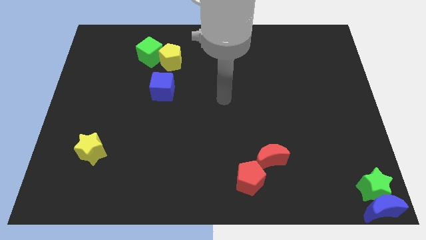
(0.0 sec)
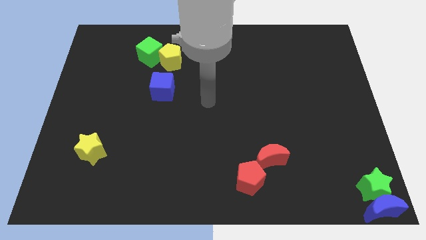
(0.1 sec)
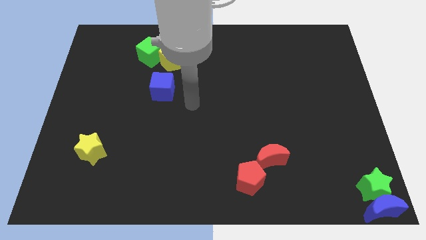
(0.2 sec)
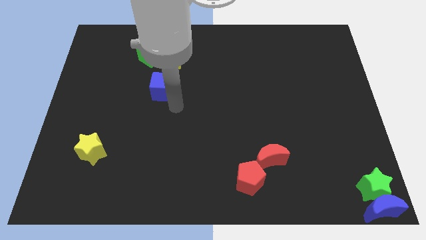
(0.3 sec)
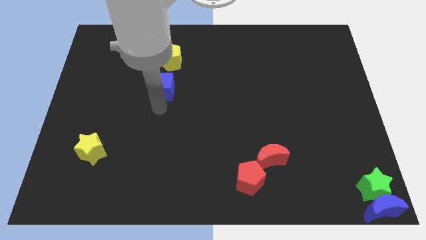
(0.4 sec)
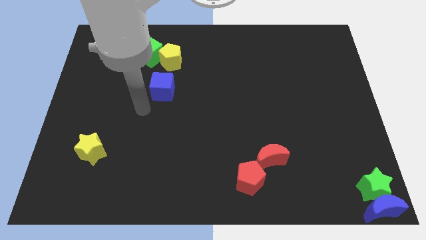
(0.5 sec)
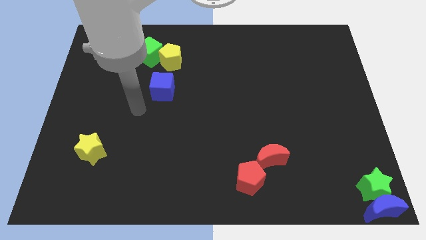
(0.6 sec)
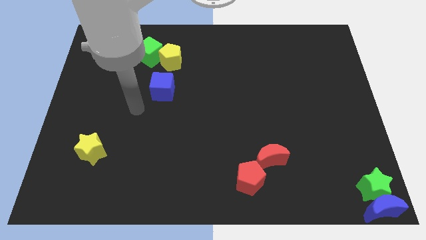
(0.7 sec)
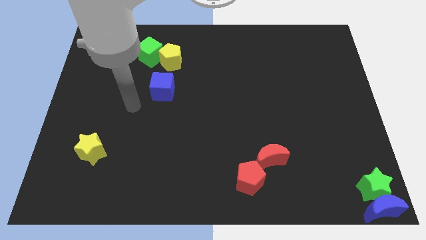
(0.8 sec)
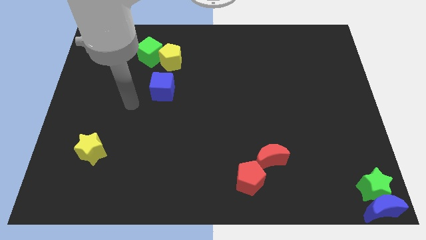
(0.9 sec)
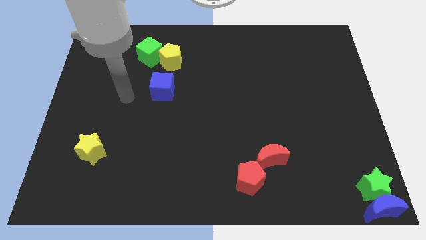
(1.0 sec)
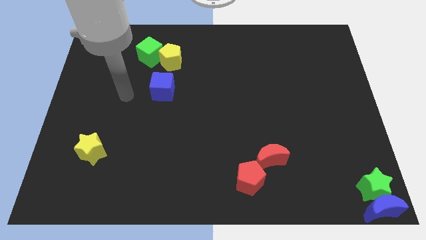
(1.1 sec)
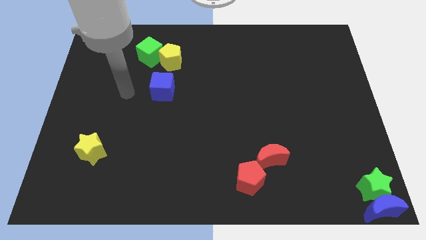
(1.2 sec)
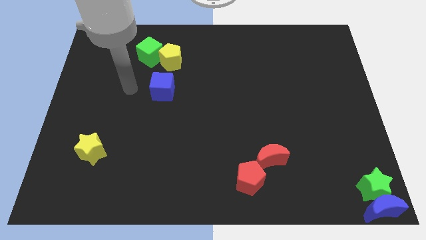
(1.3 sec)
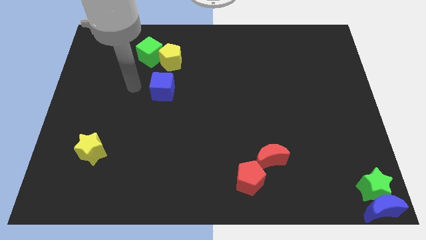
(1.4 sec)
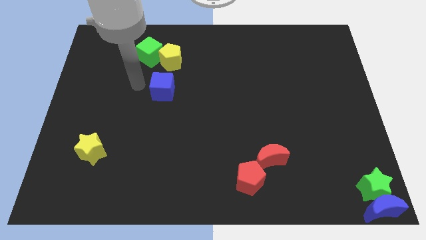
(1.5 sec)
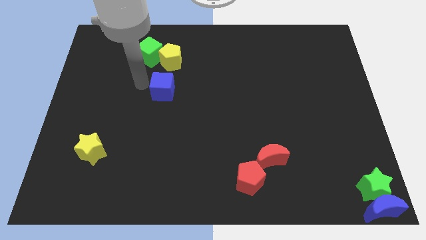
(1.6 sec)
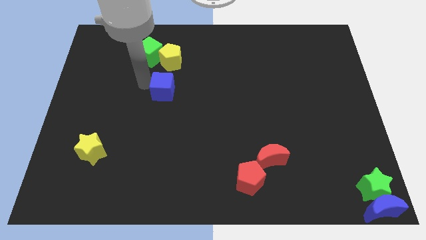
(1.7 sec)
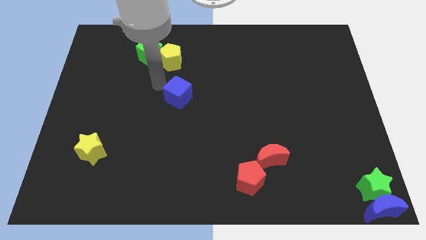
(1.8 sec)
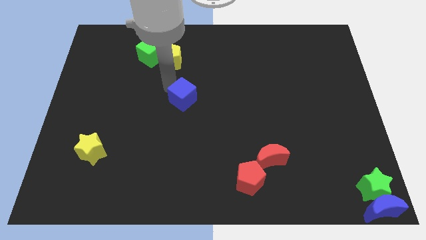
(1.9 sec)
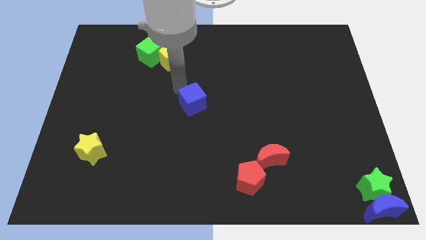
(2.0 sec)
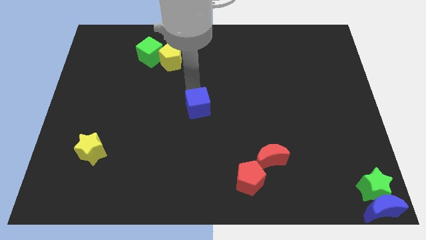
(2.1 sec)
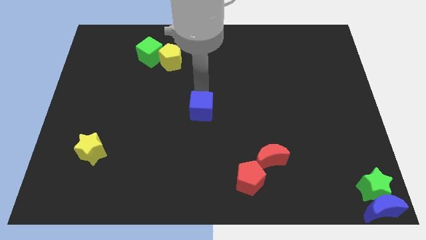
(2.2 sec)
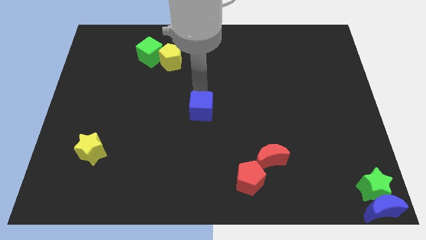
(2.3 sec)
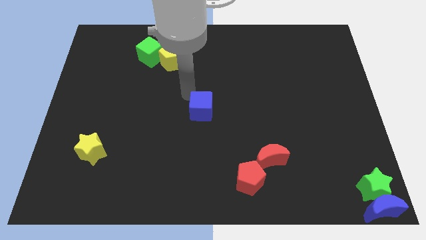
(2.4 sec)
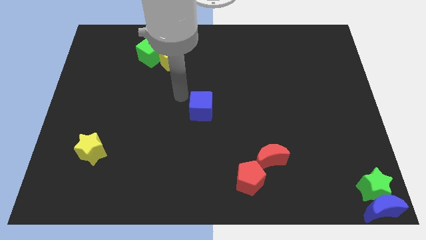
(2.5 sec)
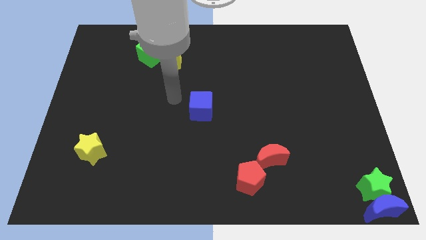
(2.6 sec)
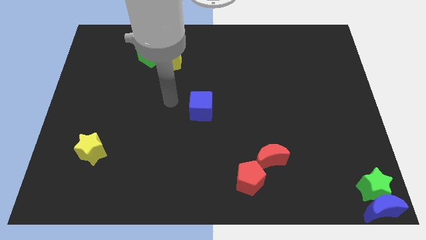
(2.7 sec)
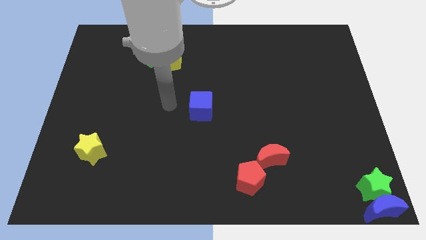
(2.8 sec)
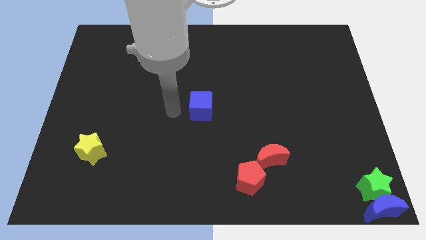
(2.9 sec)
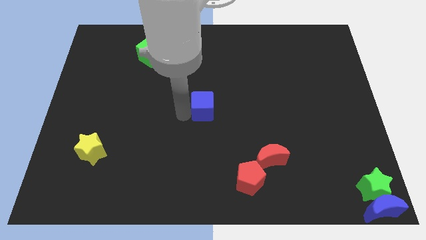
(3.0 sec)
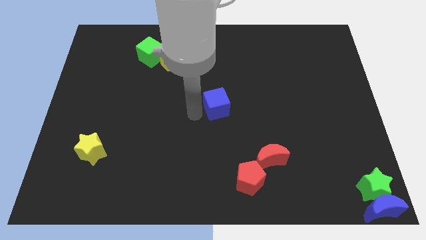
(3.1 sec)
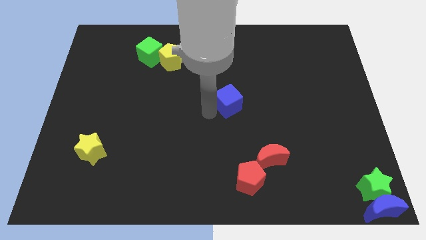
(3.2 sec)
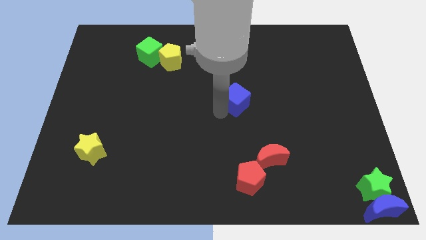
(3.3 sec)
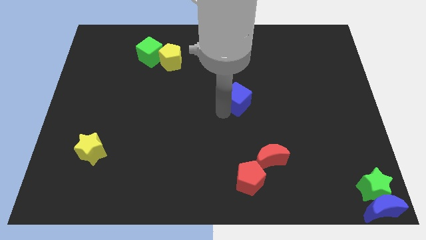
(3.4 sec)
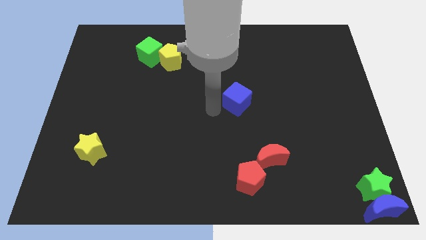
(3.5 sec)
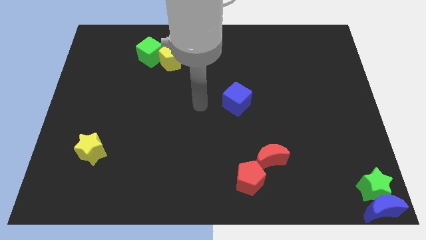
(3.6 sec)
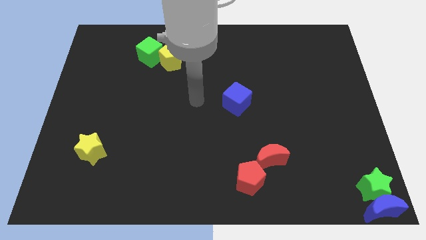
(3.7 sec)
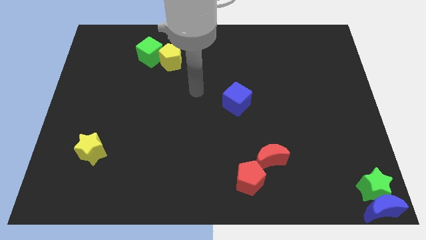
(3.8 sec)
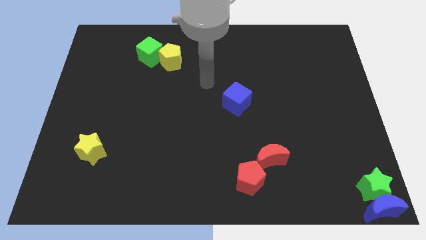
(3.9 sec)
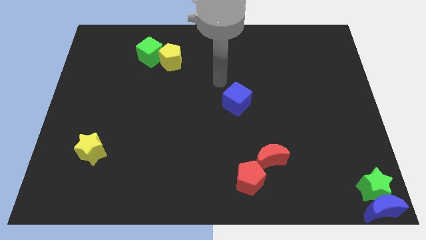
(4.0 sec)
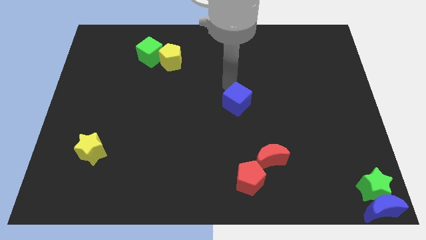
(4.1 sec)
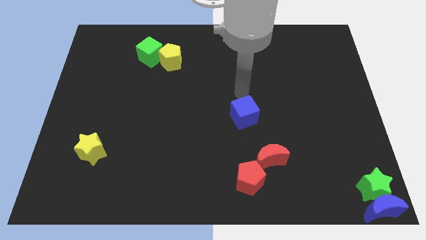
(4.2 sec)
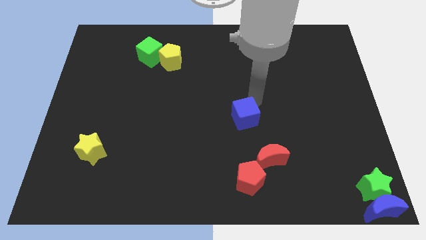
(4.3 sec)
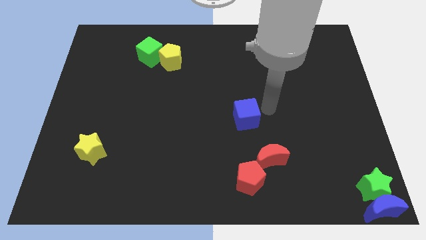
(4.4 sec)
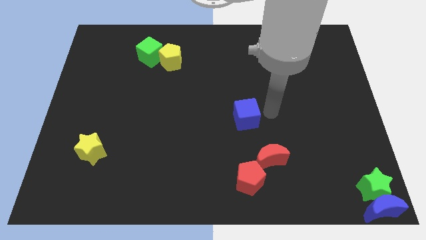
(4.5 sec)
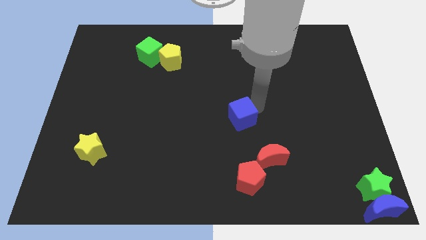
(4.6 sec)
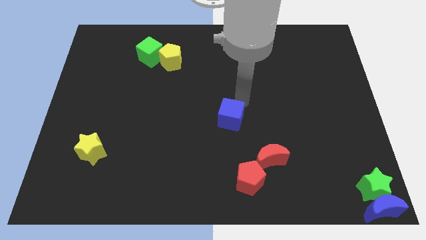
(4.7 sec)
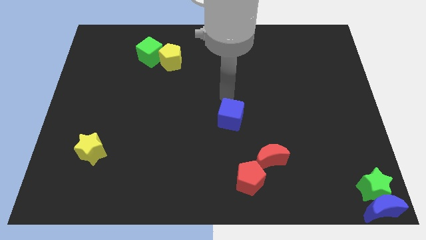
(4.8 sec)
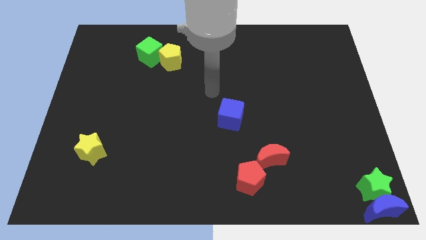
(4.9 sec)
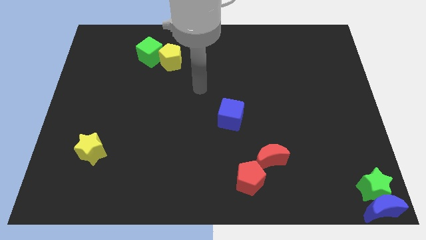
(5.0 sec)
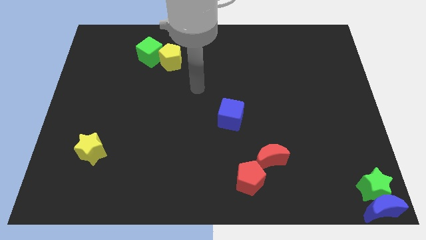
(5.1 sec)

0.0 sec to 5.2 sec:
place the blue cube at the center

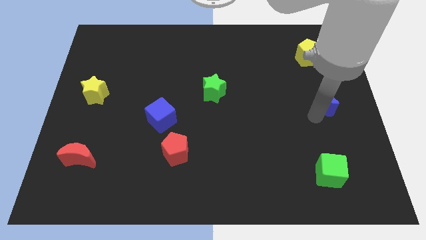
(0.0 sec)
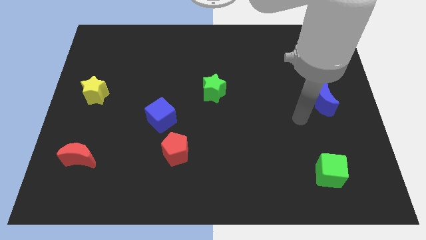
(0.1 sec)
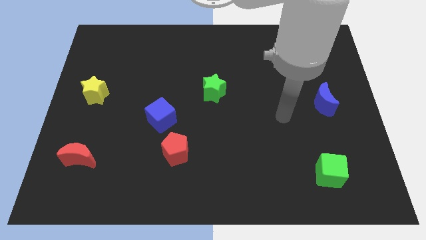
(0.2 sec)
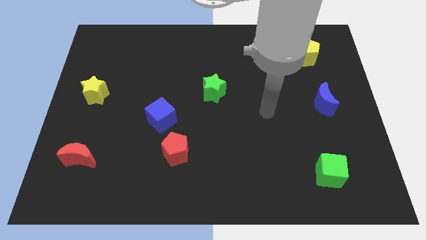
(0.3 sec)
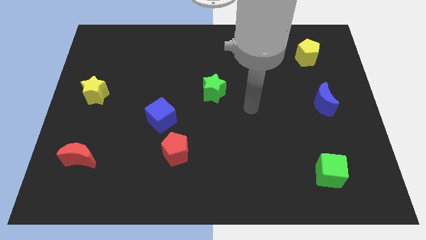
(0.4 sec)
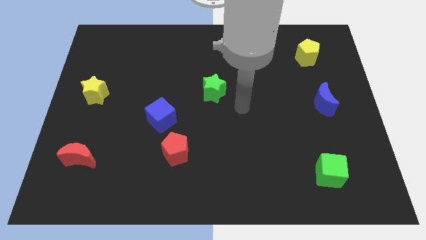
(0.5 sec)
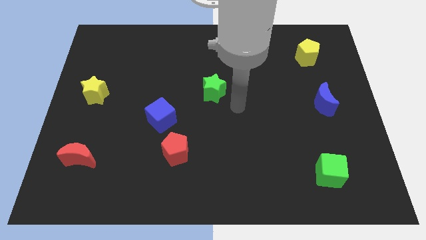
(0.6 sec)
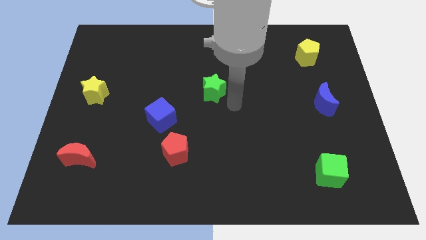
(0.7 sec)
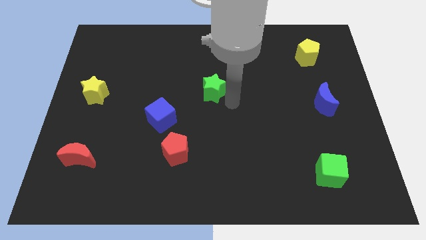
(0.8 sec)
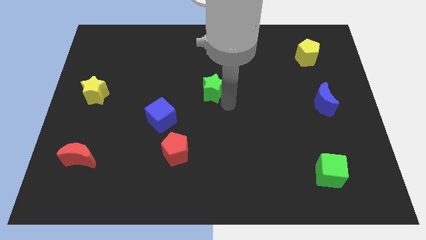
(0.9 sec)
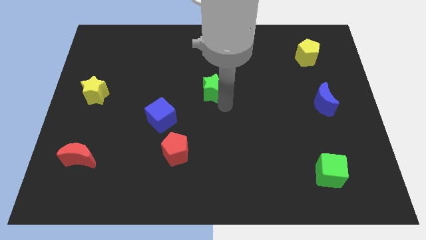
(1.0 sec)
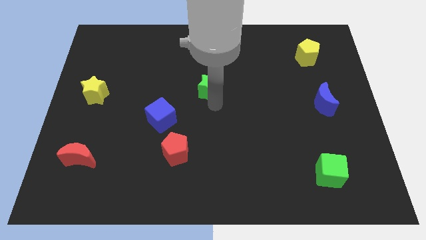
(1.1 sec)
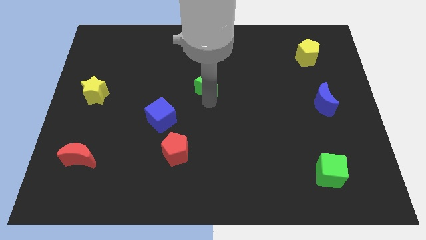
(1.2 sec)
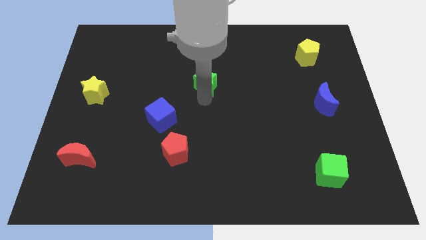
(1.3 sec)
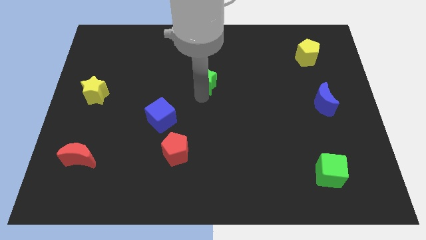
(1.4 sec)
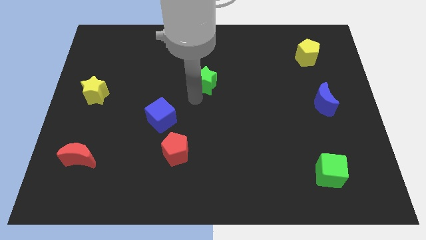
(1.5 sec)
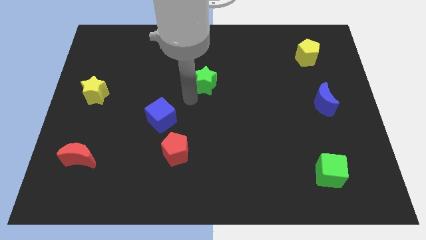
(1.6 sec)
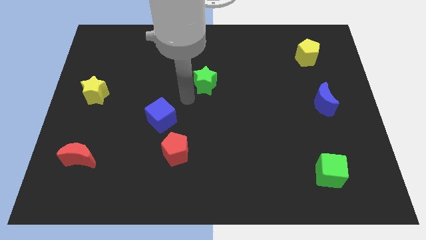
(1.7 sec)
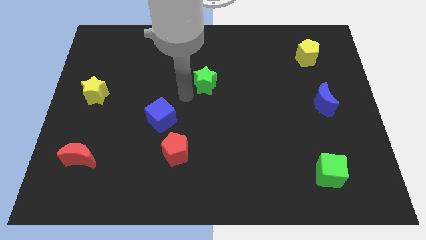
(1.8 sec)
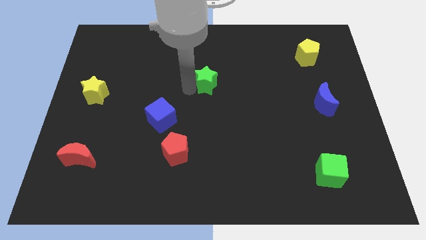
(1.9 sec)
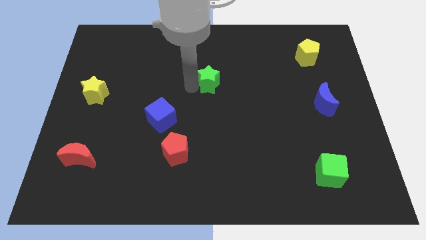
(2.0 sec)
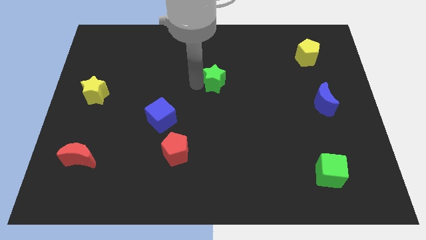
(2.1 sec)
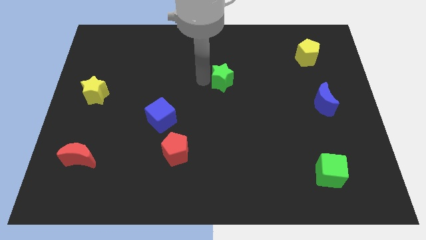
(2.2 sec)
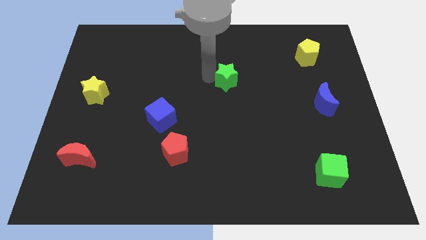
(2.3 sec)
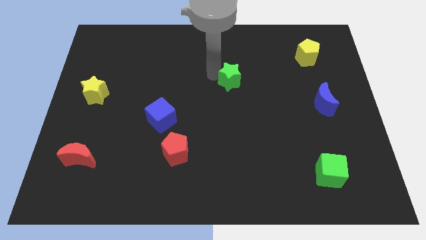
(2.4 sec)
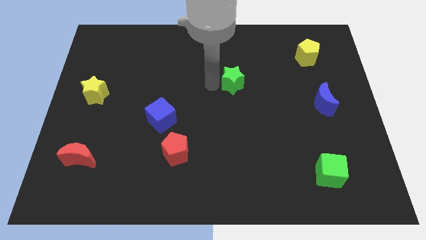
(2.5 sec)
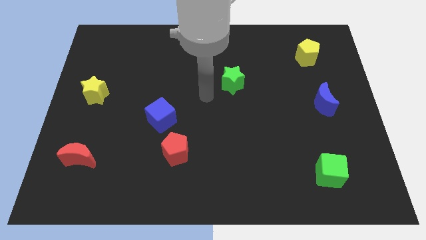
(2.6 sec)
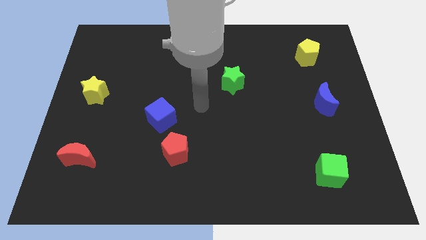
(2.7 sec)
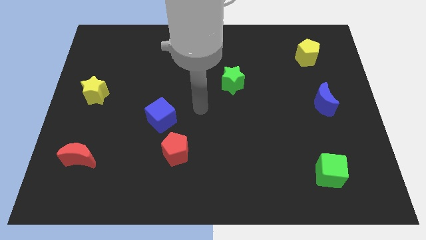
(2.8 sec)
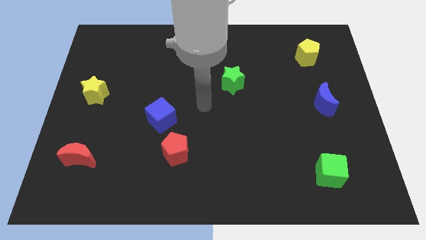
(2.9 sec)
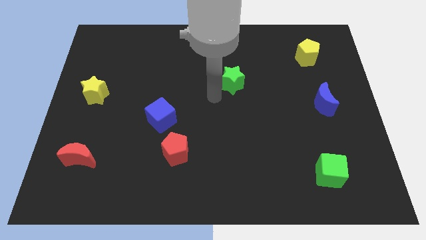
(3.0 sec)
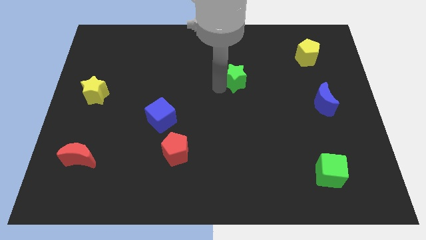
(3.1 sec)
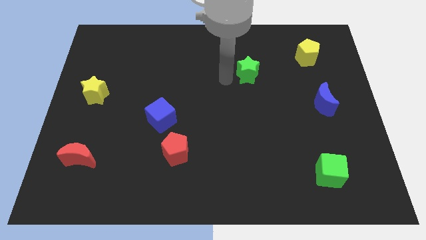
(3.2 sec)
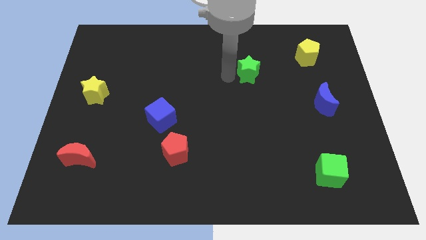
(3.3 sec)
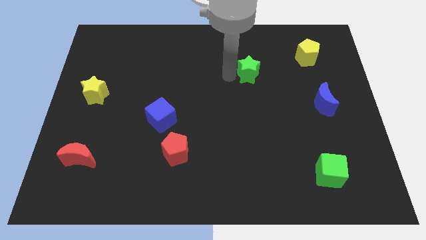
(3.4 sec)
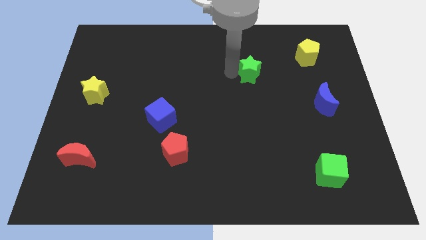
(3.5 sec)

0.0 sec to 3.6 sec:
slide the green star towards the top right
